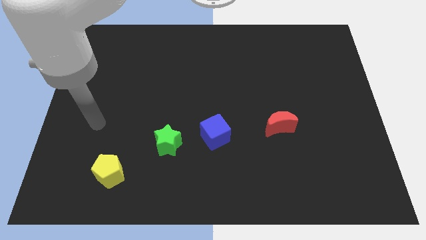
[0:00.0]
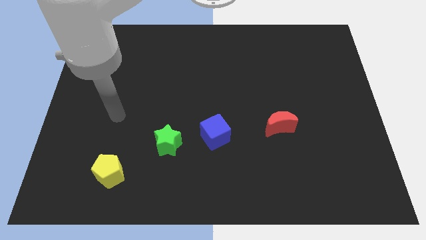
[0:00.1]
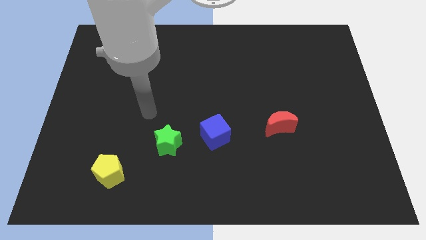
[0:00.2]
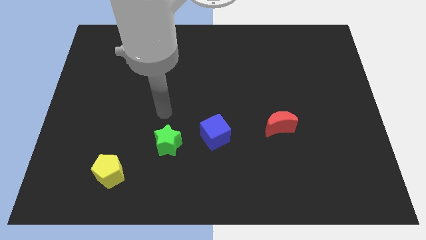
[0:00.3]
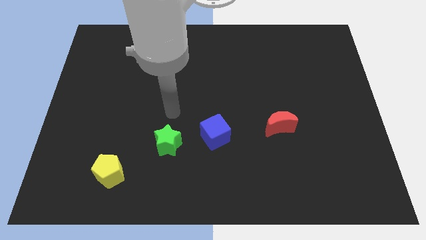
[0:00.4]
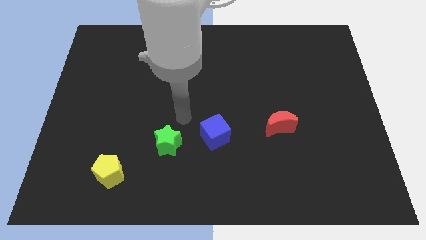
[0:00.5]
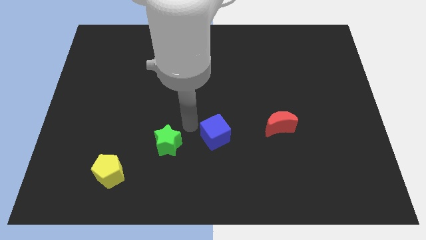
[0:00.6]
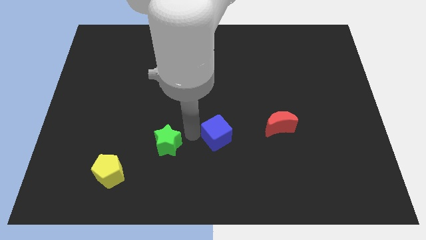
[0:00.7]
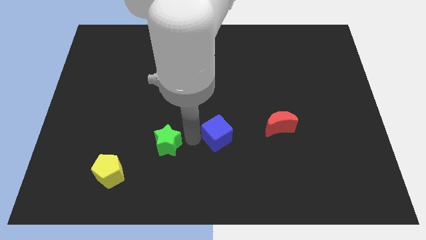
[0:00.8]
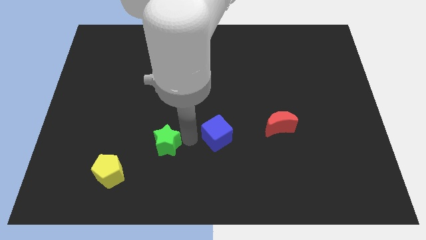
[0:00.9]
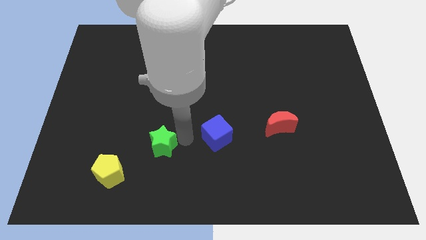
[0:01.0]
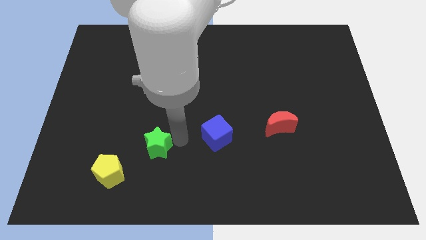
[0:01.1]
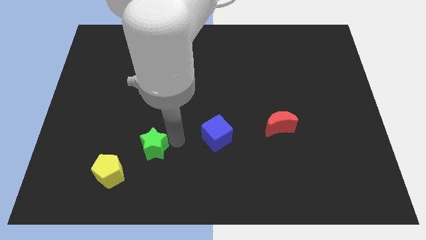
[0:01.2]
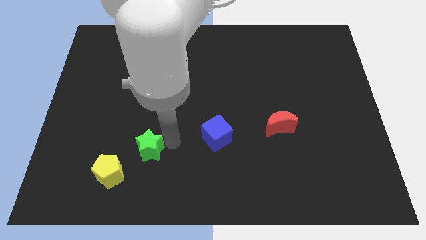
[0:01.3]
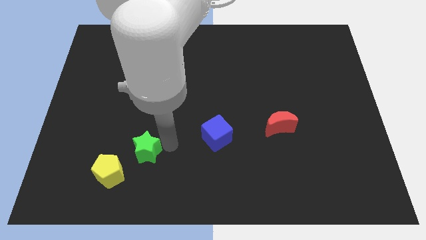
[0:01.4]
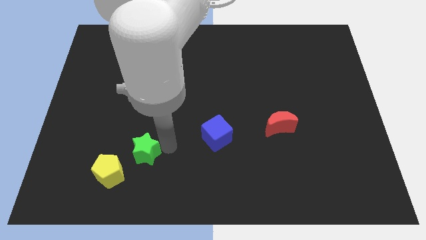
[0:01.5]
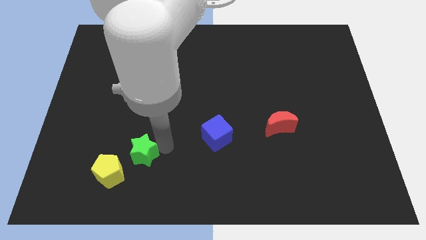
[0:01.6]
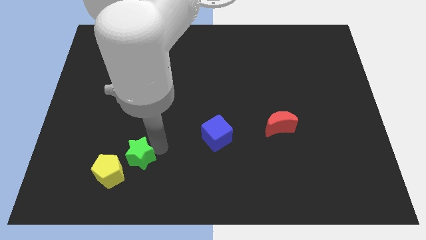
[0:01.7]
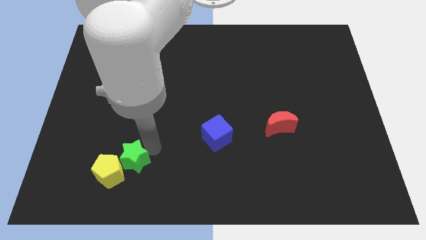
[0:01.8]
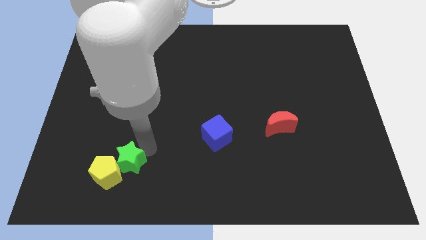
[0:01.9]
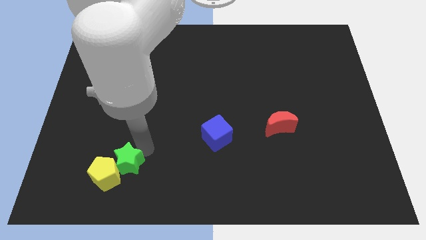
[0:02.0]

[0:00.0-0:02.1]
push the green block towards the yellow pentagon

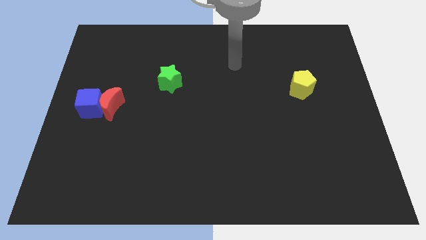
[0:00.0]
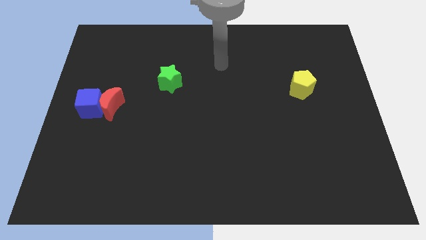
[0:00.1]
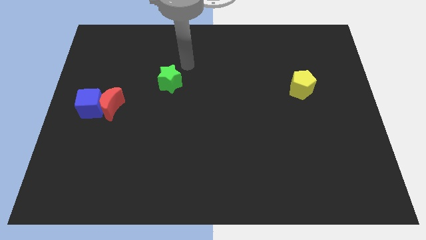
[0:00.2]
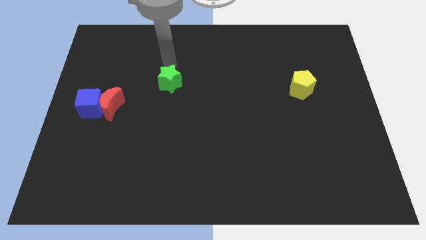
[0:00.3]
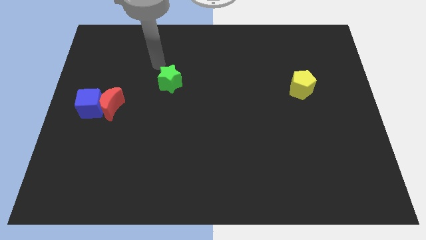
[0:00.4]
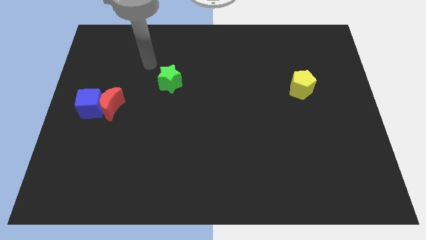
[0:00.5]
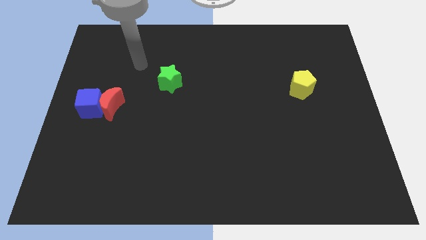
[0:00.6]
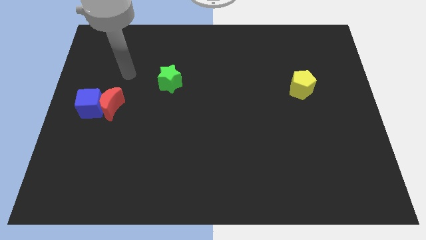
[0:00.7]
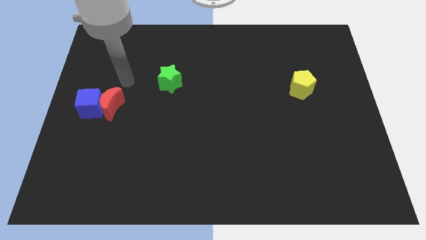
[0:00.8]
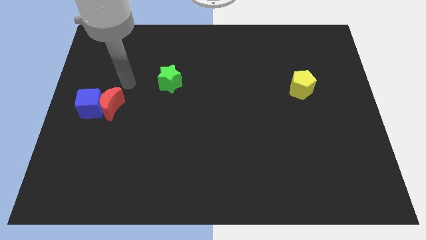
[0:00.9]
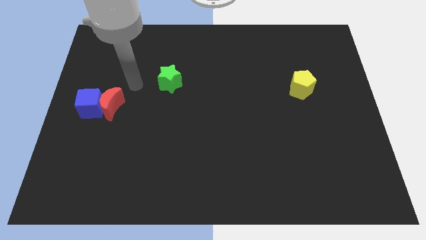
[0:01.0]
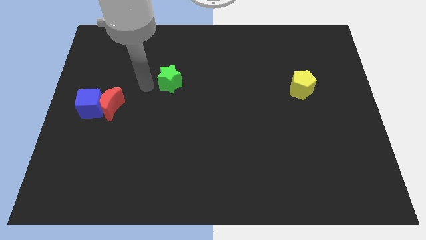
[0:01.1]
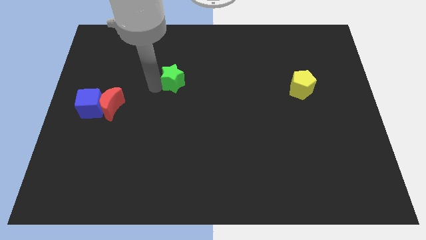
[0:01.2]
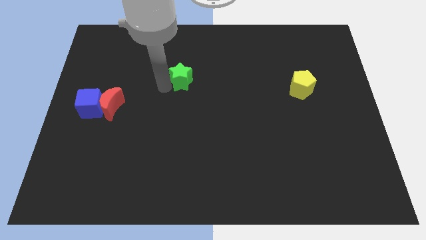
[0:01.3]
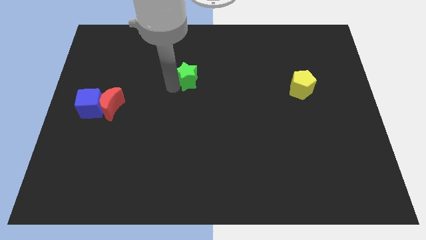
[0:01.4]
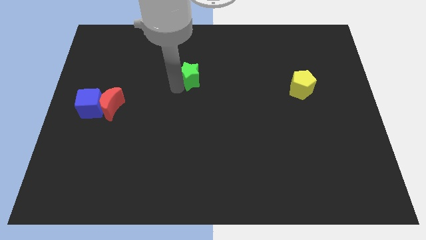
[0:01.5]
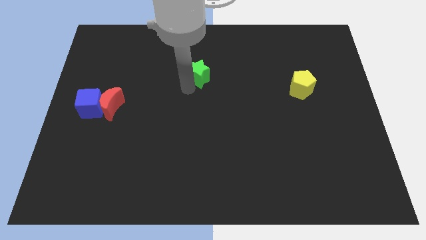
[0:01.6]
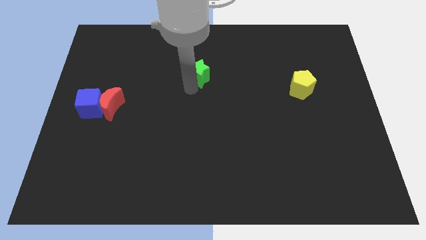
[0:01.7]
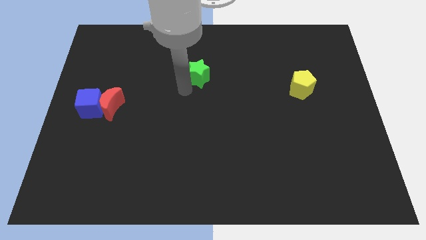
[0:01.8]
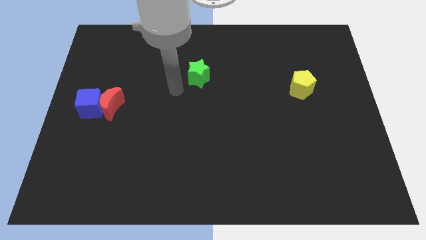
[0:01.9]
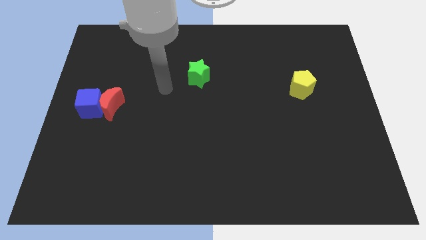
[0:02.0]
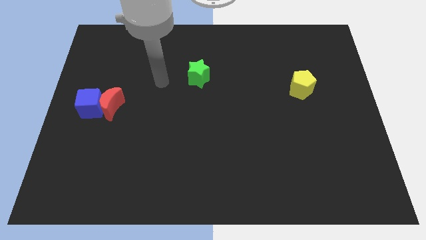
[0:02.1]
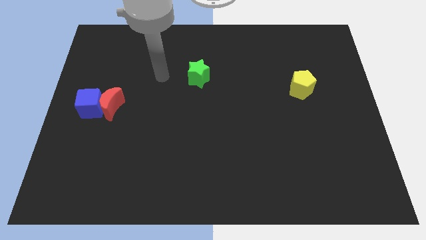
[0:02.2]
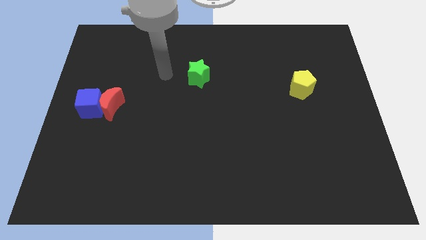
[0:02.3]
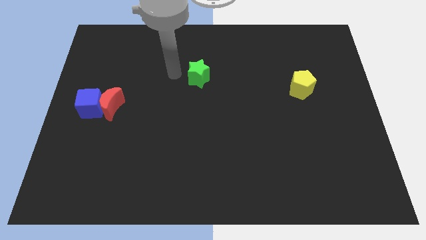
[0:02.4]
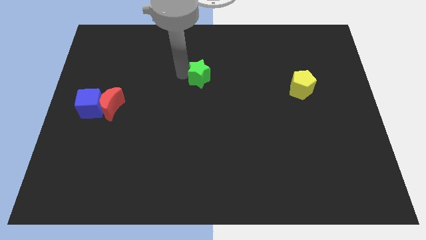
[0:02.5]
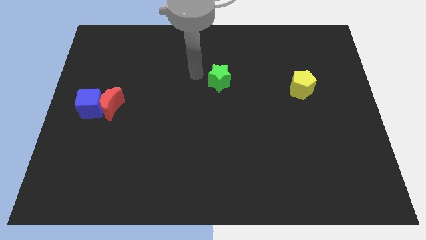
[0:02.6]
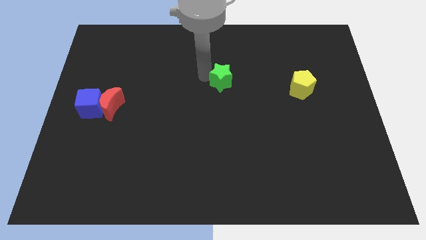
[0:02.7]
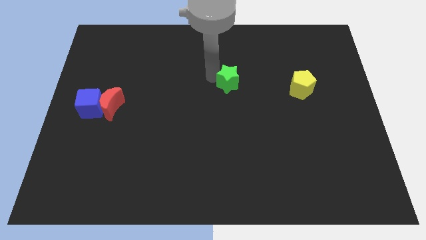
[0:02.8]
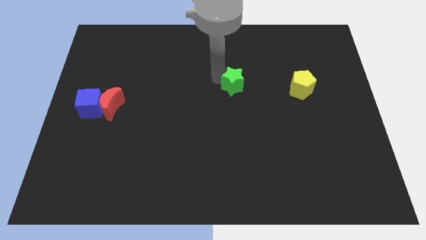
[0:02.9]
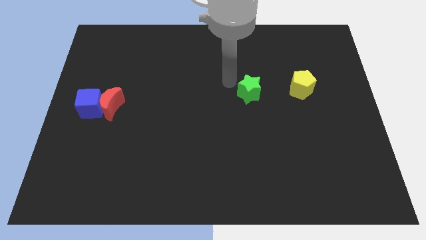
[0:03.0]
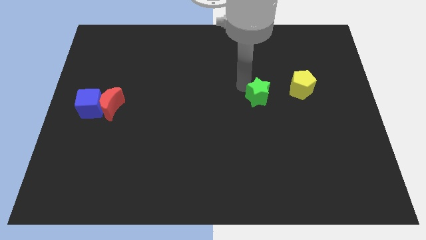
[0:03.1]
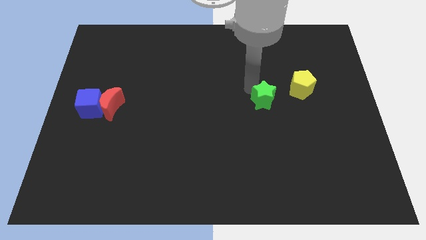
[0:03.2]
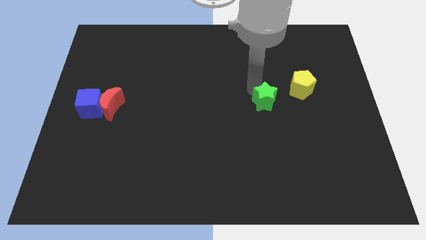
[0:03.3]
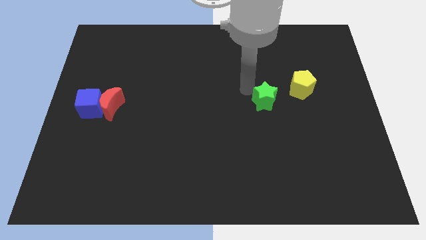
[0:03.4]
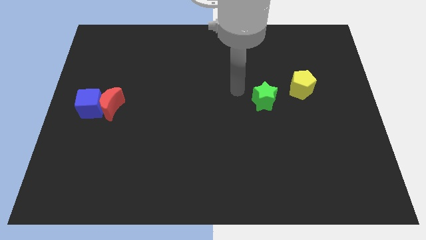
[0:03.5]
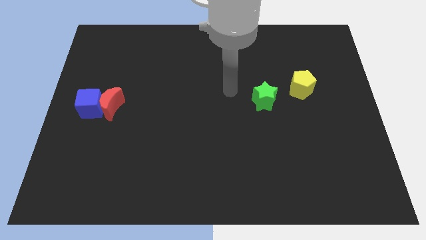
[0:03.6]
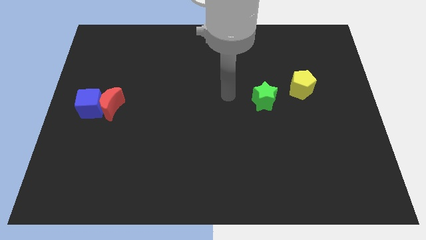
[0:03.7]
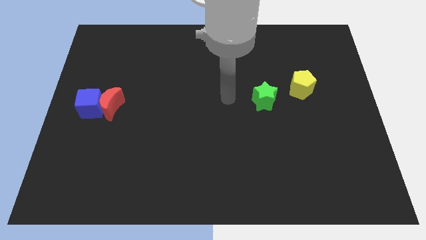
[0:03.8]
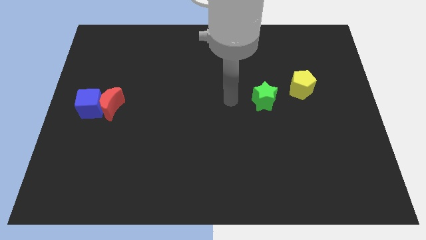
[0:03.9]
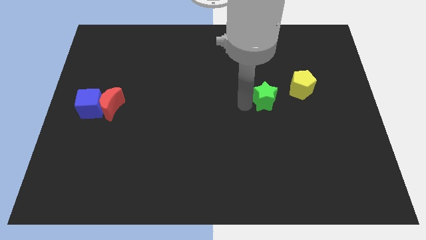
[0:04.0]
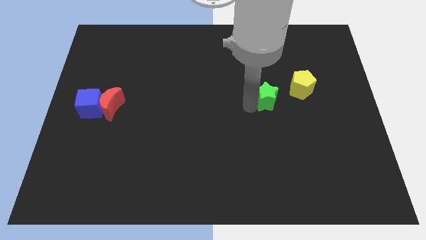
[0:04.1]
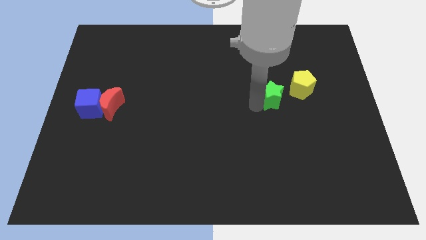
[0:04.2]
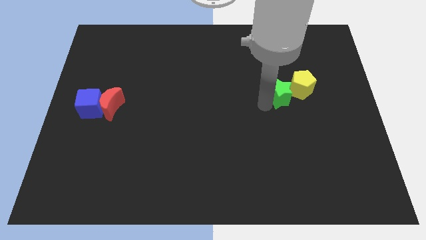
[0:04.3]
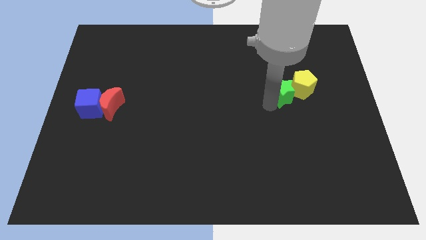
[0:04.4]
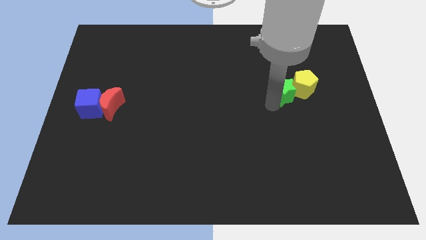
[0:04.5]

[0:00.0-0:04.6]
put the green star next to the yellow pentagon

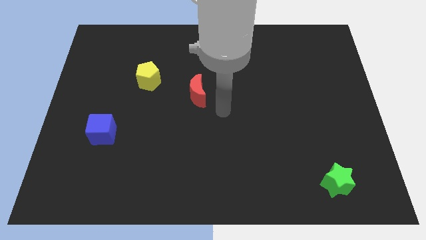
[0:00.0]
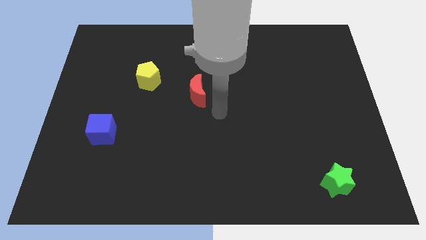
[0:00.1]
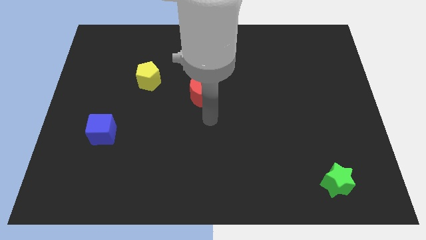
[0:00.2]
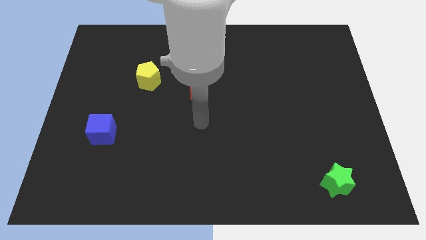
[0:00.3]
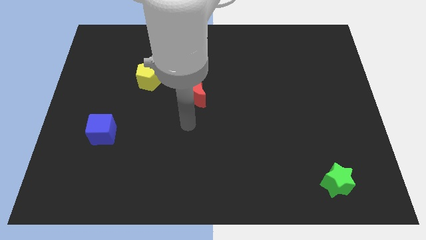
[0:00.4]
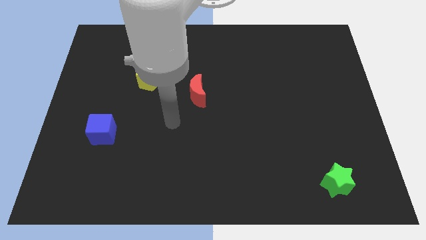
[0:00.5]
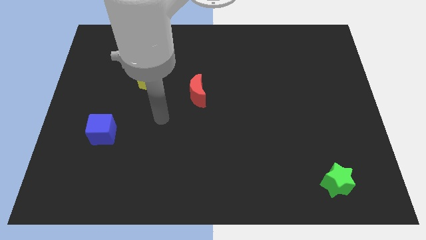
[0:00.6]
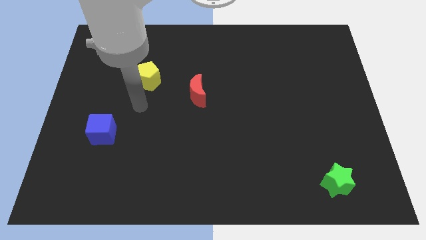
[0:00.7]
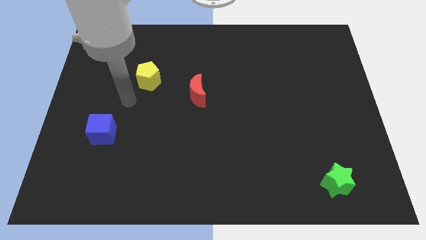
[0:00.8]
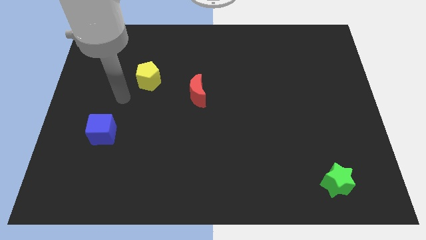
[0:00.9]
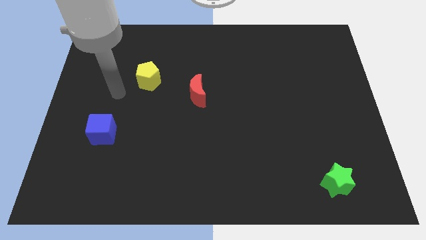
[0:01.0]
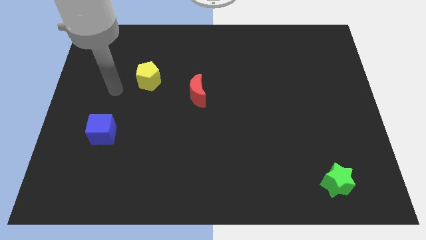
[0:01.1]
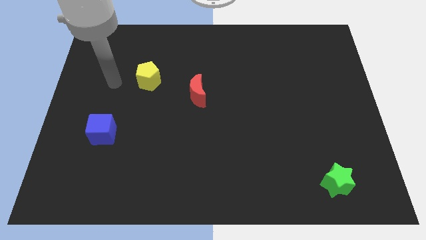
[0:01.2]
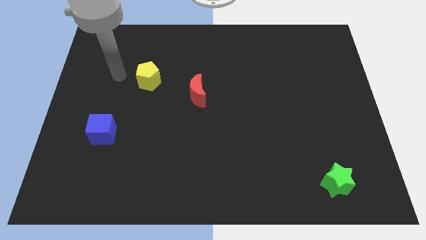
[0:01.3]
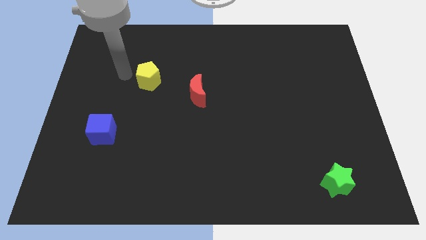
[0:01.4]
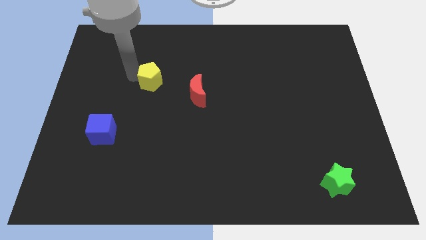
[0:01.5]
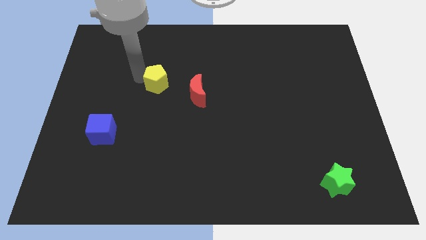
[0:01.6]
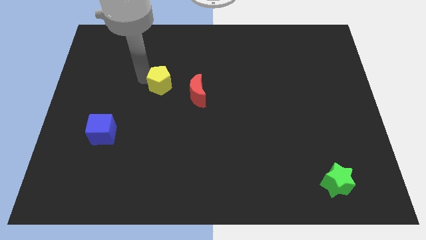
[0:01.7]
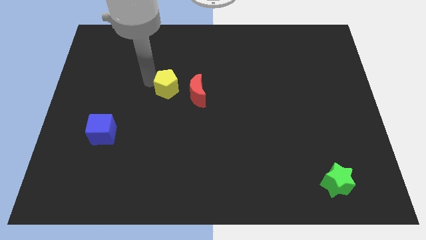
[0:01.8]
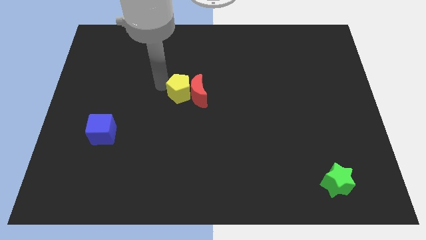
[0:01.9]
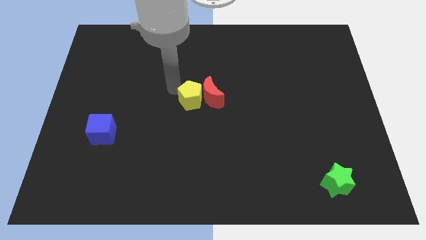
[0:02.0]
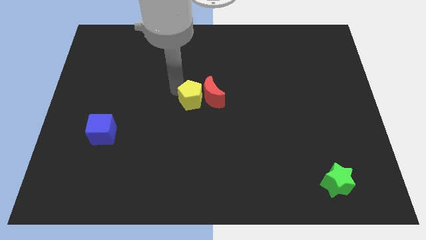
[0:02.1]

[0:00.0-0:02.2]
move the pentagon next to the red block
